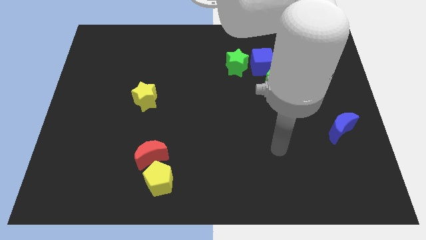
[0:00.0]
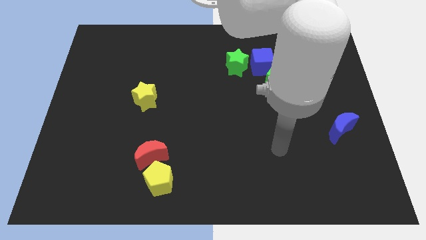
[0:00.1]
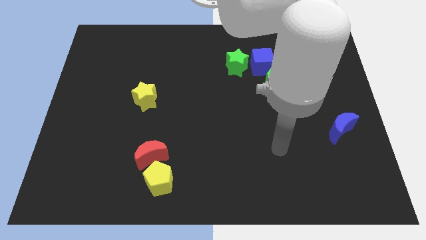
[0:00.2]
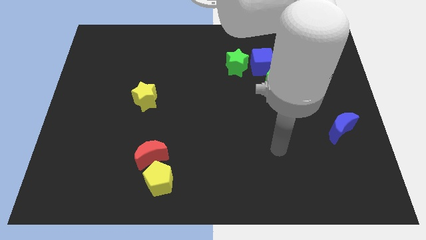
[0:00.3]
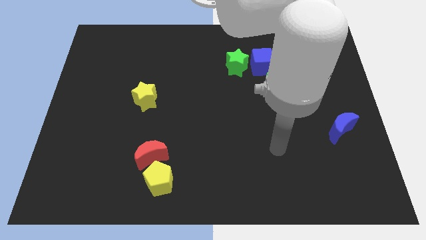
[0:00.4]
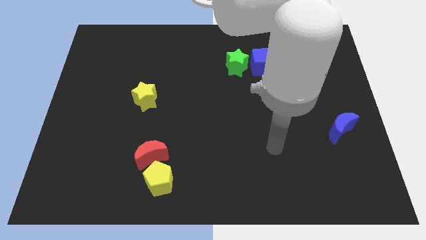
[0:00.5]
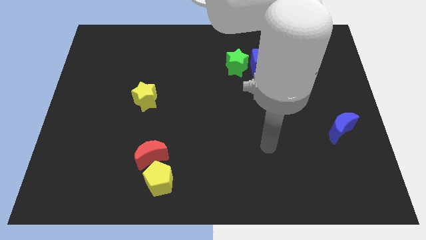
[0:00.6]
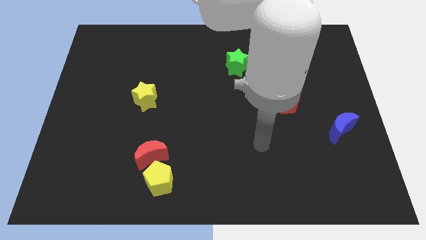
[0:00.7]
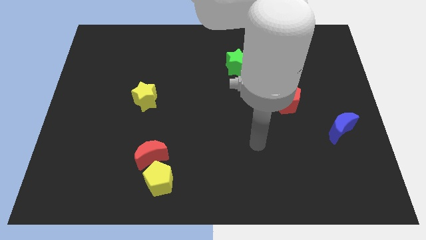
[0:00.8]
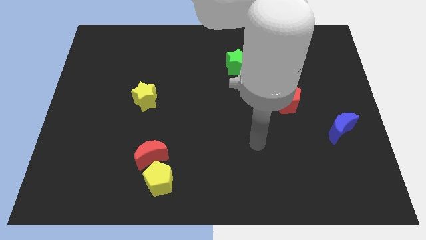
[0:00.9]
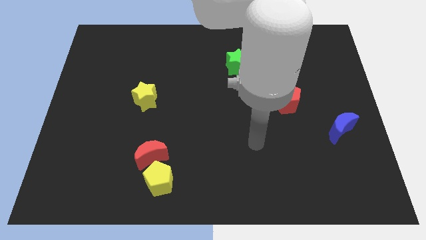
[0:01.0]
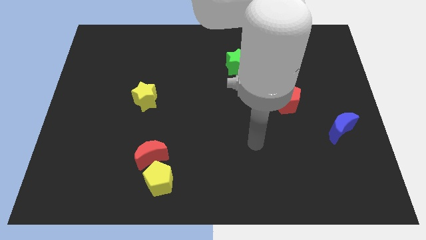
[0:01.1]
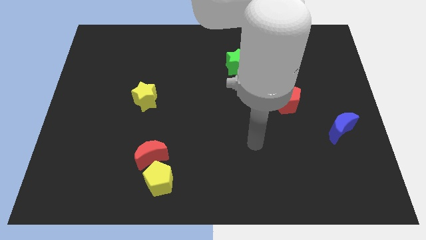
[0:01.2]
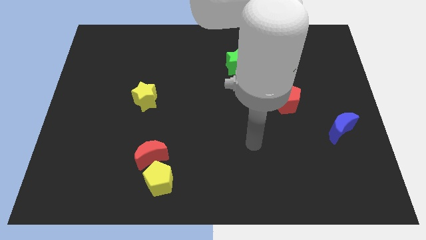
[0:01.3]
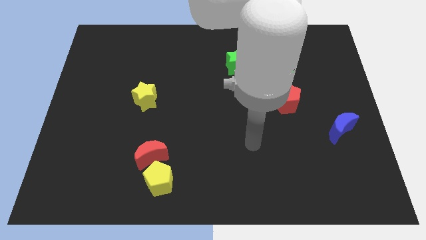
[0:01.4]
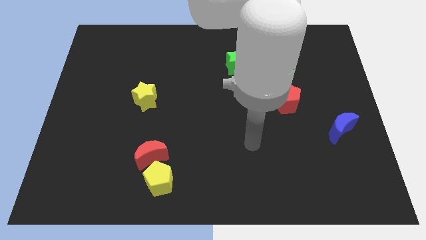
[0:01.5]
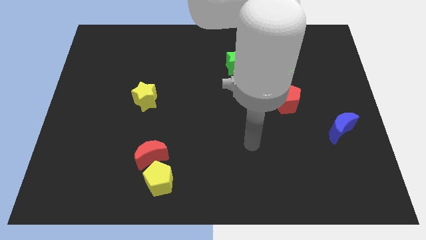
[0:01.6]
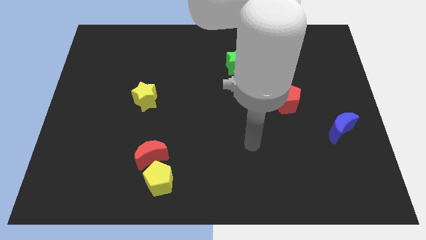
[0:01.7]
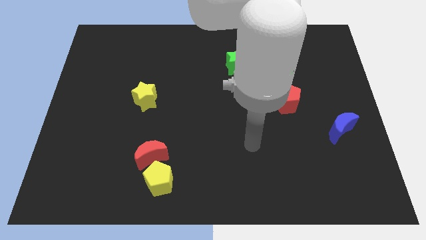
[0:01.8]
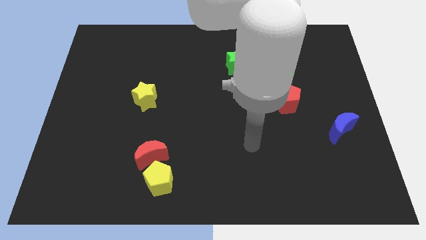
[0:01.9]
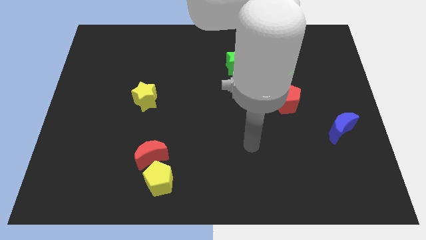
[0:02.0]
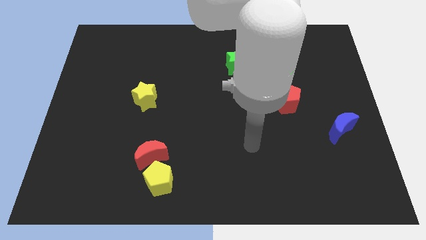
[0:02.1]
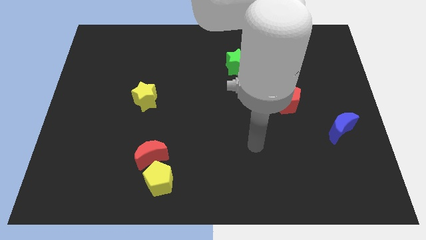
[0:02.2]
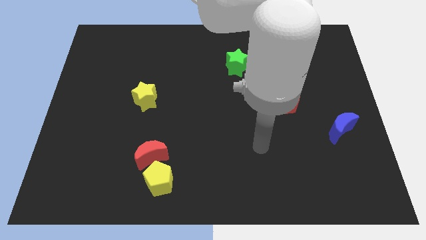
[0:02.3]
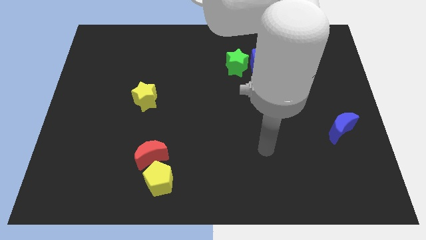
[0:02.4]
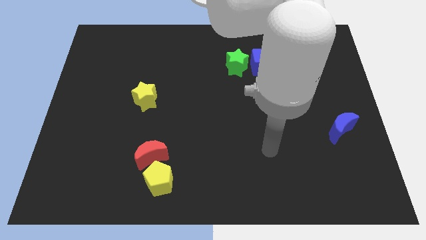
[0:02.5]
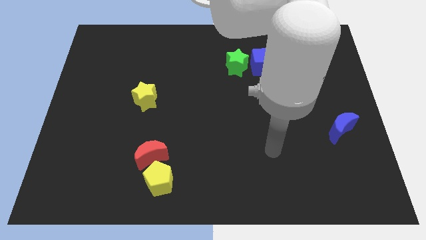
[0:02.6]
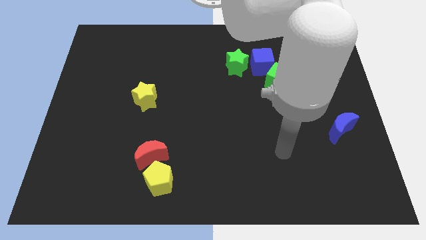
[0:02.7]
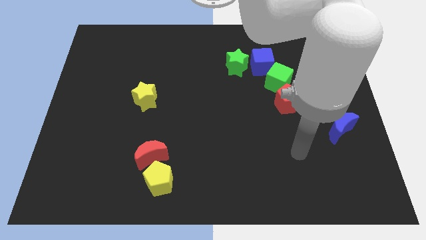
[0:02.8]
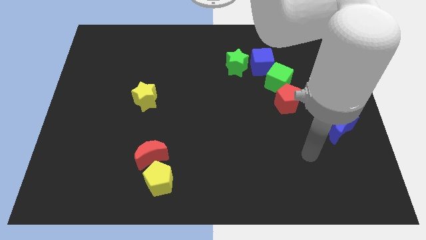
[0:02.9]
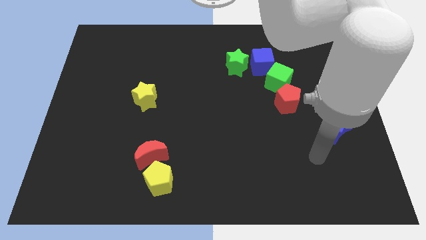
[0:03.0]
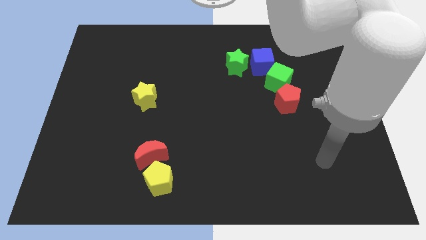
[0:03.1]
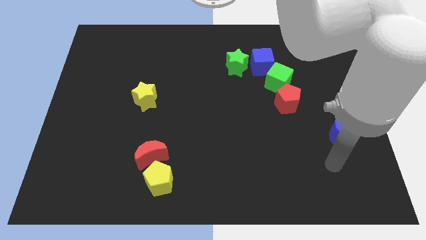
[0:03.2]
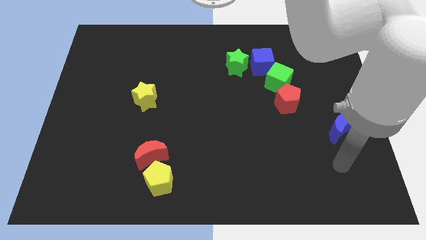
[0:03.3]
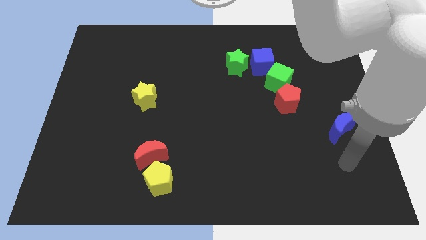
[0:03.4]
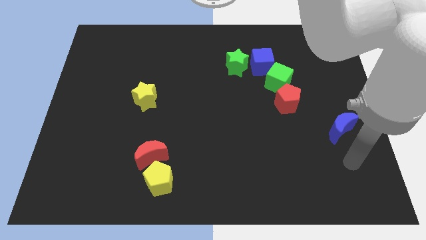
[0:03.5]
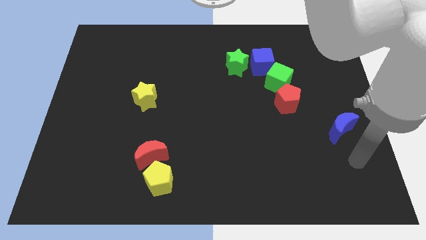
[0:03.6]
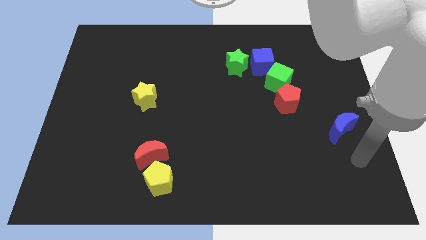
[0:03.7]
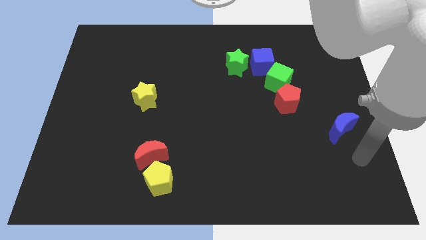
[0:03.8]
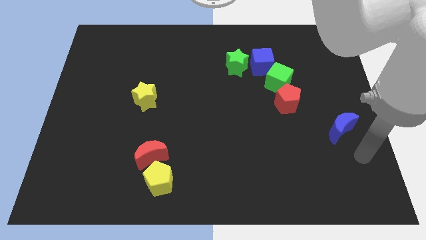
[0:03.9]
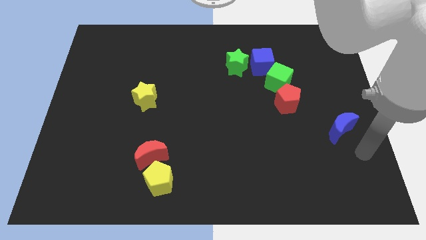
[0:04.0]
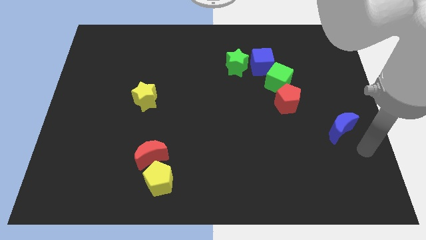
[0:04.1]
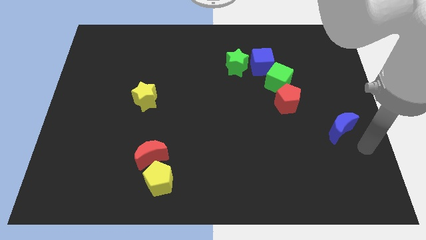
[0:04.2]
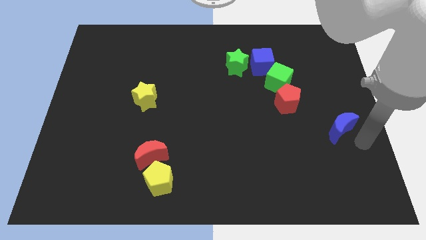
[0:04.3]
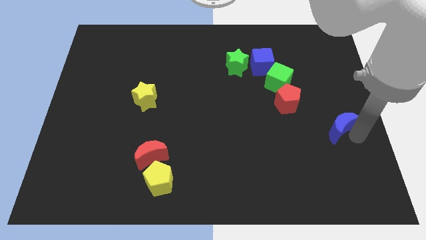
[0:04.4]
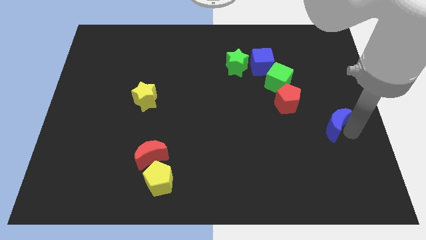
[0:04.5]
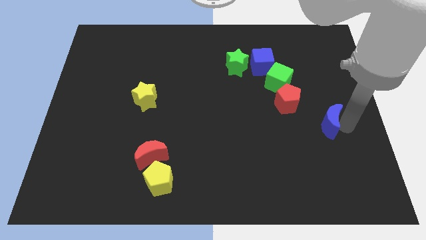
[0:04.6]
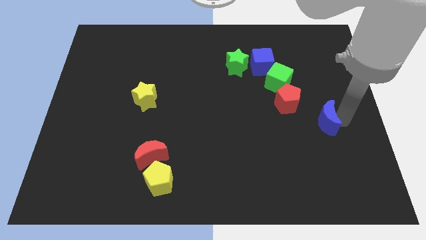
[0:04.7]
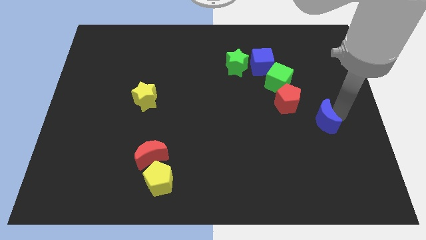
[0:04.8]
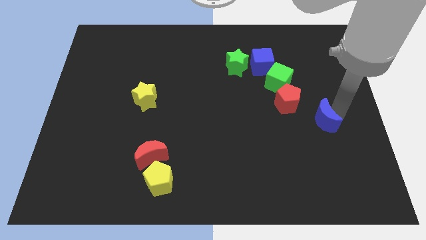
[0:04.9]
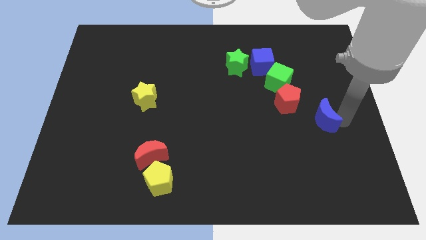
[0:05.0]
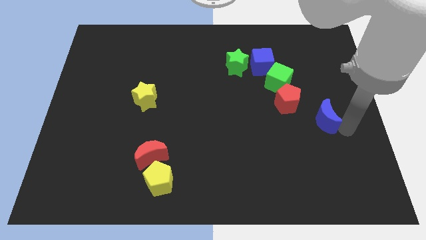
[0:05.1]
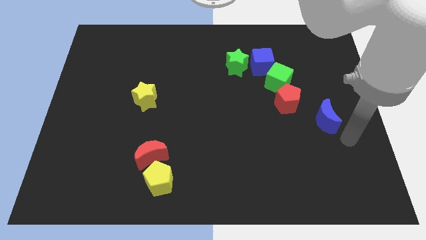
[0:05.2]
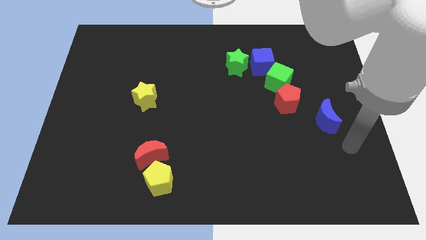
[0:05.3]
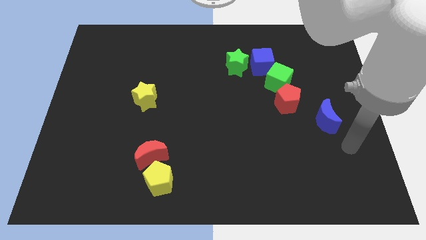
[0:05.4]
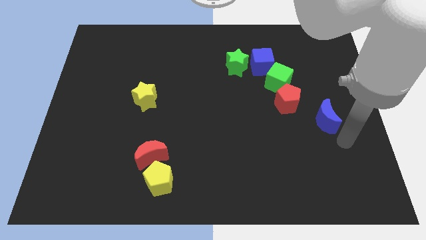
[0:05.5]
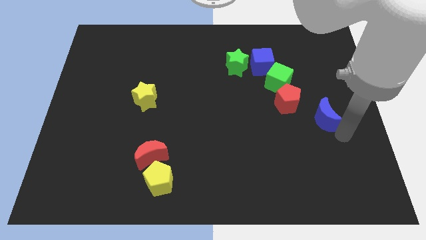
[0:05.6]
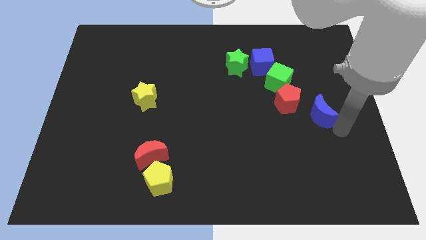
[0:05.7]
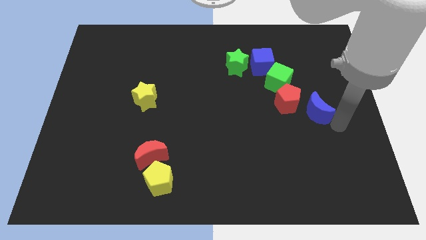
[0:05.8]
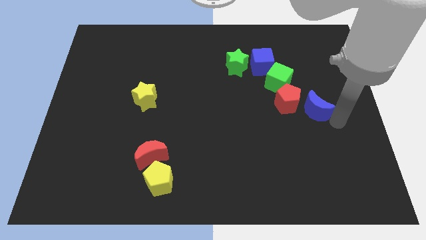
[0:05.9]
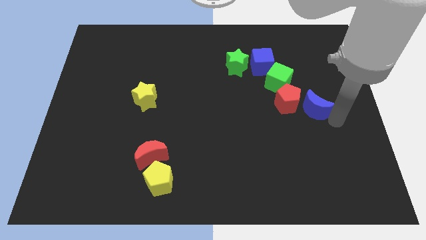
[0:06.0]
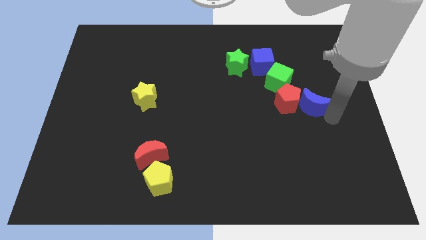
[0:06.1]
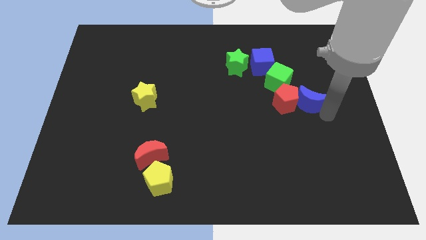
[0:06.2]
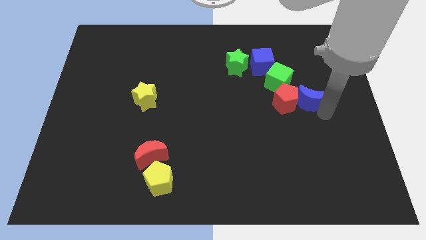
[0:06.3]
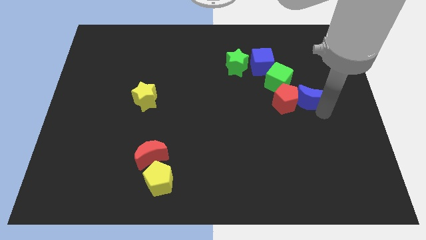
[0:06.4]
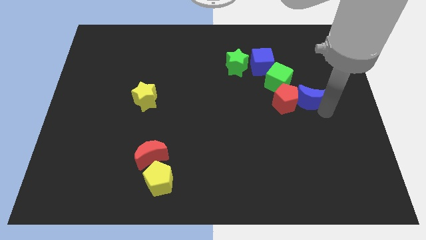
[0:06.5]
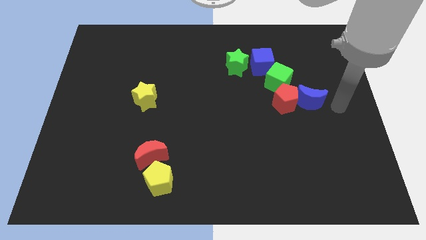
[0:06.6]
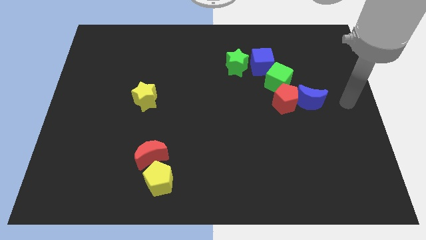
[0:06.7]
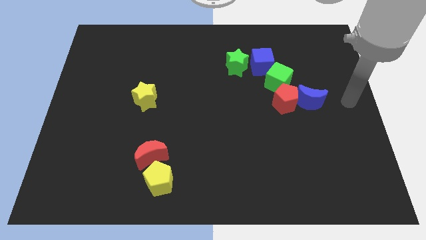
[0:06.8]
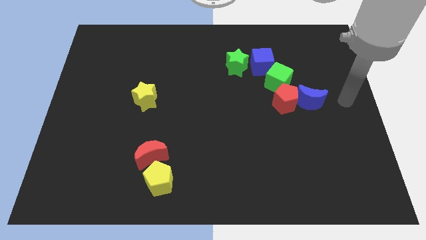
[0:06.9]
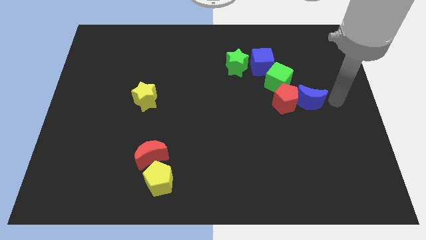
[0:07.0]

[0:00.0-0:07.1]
push the blue crescent close to the red pentagon

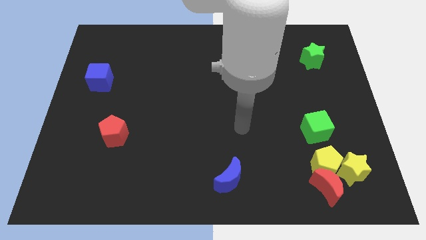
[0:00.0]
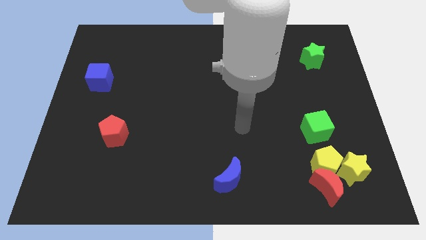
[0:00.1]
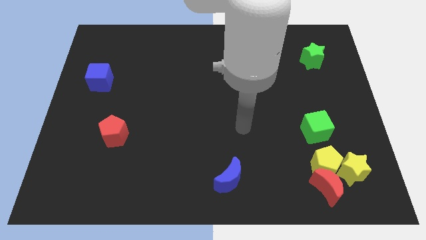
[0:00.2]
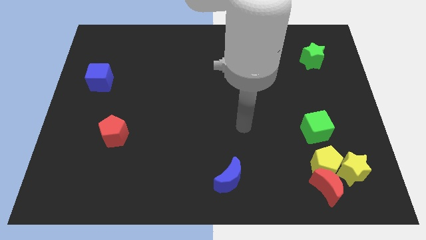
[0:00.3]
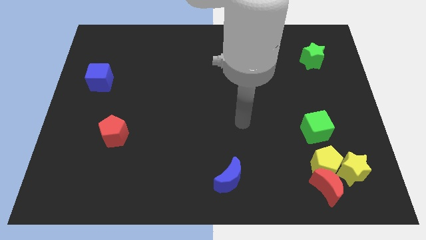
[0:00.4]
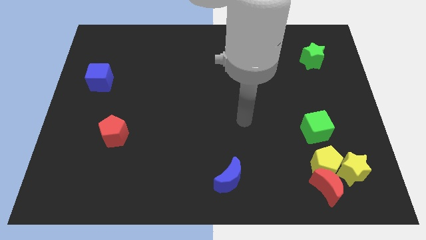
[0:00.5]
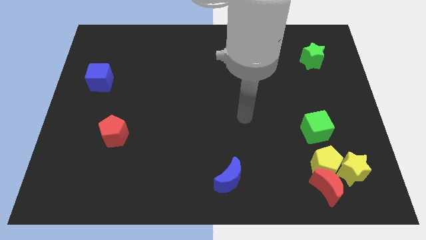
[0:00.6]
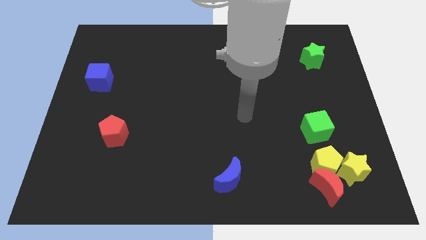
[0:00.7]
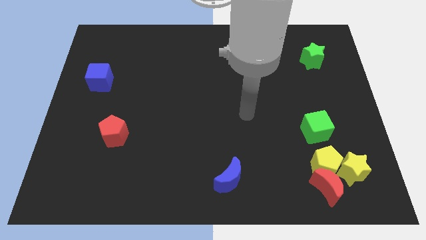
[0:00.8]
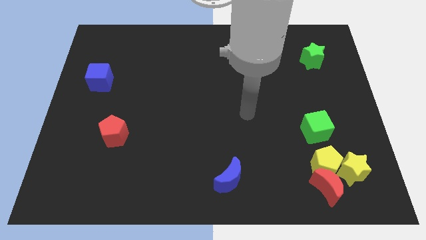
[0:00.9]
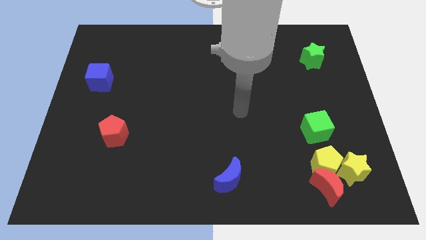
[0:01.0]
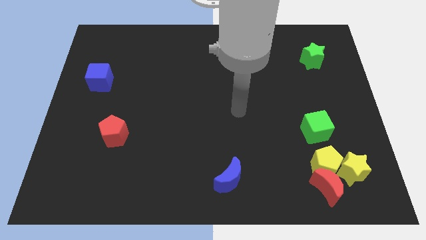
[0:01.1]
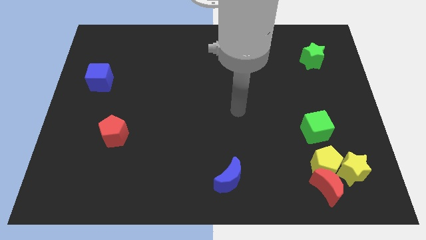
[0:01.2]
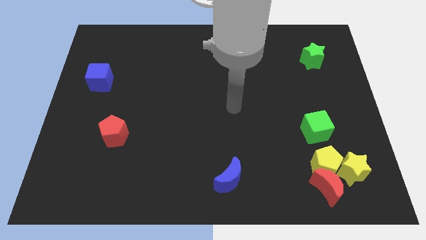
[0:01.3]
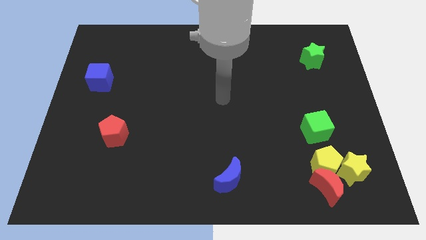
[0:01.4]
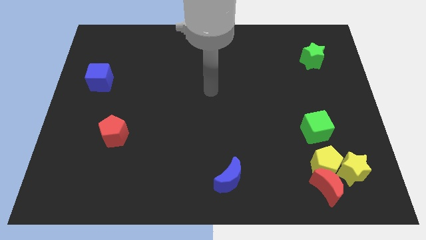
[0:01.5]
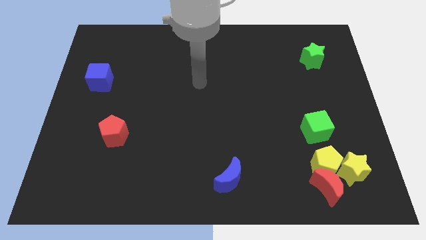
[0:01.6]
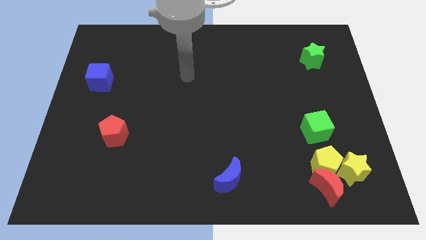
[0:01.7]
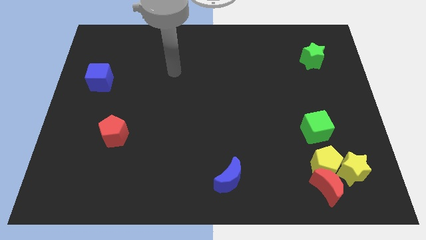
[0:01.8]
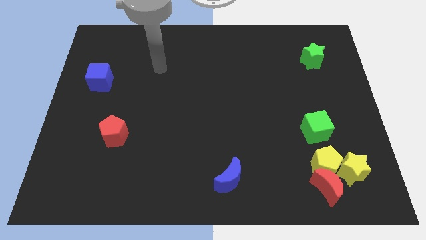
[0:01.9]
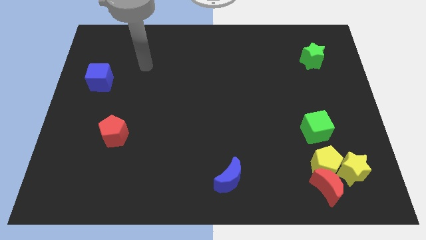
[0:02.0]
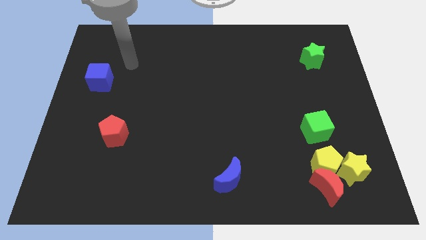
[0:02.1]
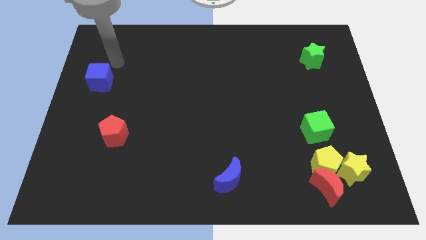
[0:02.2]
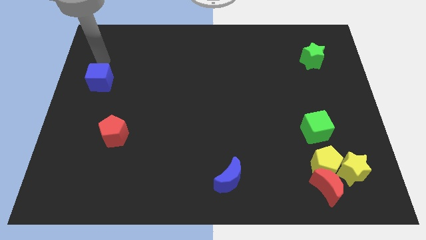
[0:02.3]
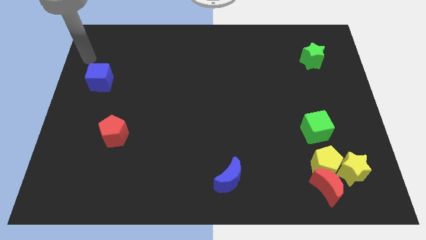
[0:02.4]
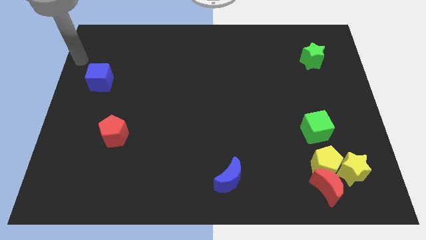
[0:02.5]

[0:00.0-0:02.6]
place your arm to the top of the blue cube
